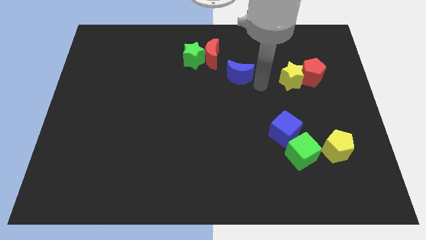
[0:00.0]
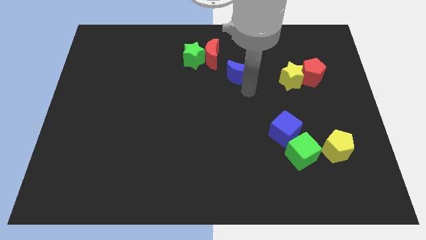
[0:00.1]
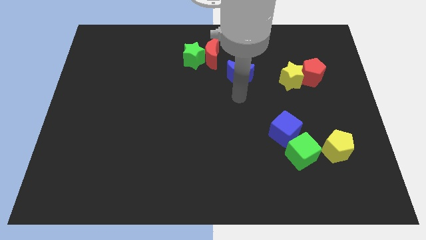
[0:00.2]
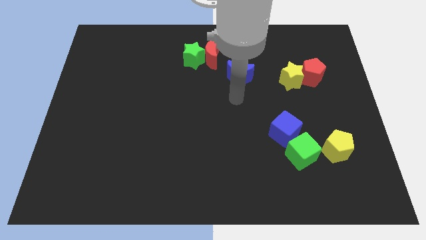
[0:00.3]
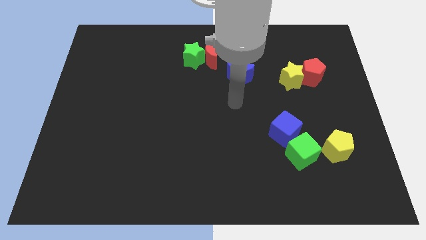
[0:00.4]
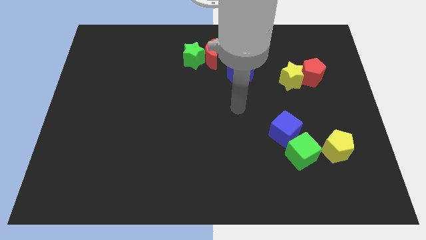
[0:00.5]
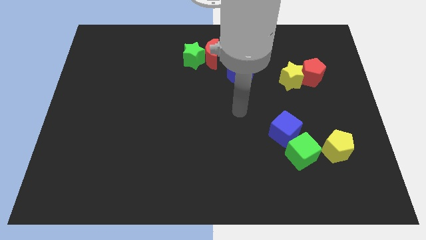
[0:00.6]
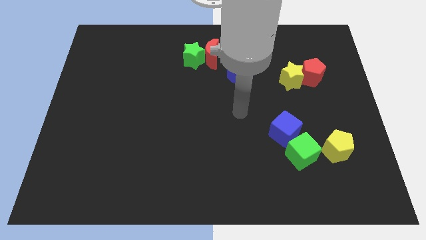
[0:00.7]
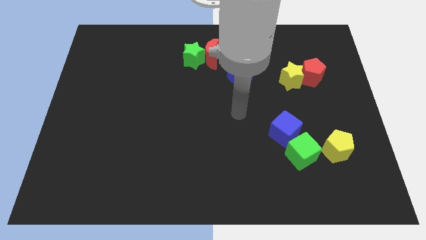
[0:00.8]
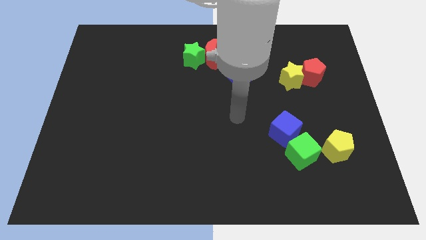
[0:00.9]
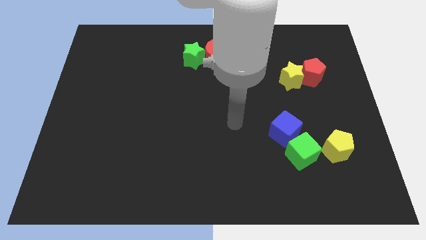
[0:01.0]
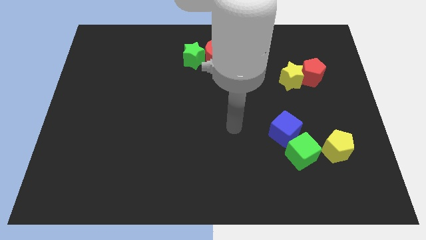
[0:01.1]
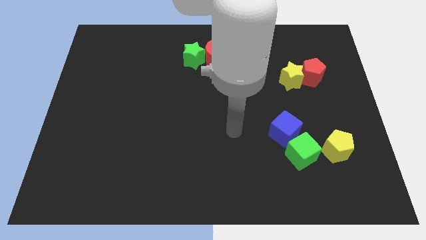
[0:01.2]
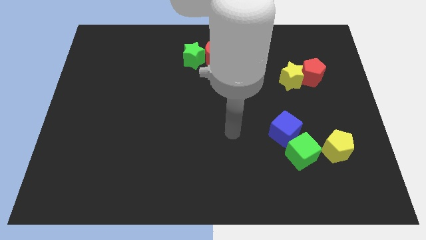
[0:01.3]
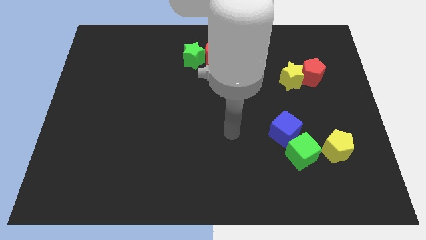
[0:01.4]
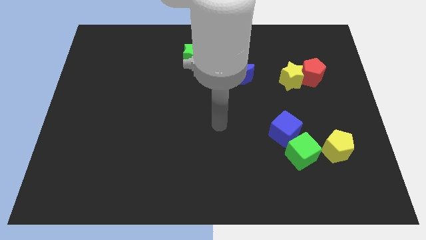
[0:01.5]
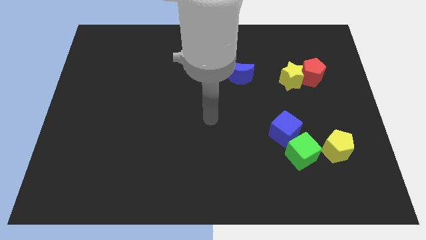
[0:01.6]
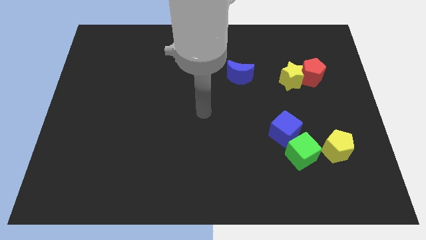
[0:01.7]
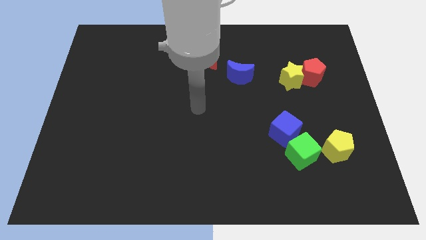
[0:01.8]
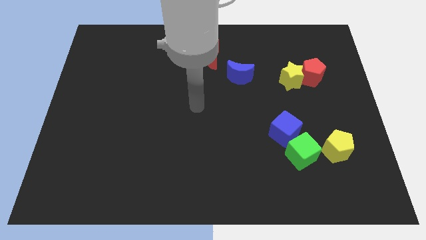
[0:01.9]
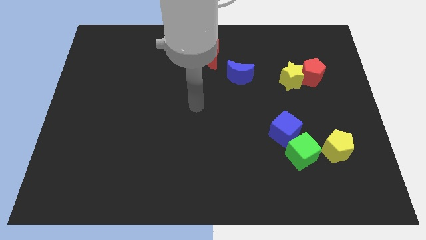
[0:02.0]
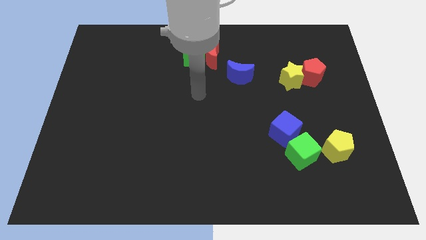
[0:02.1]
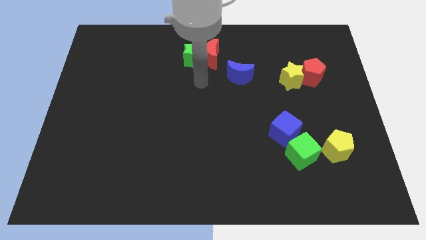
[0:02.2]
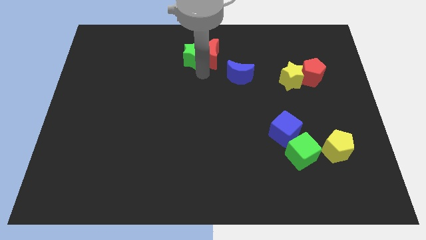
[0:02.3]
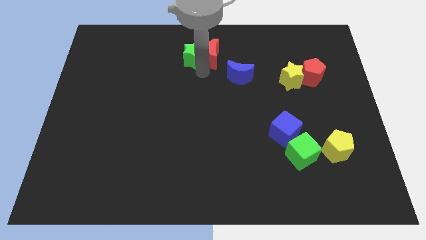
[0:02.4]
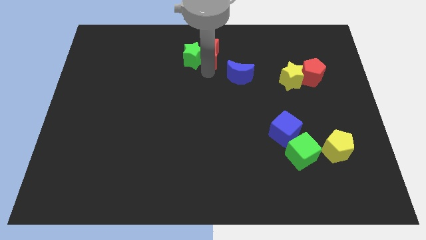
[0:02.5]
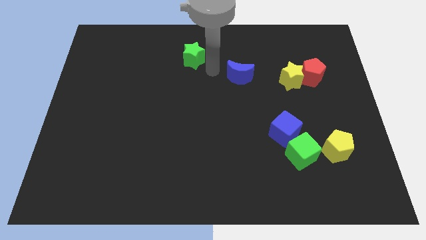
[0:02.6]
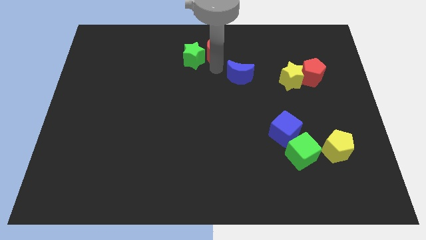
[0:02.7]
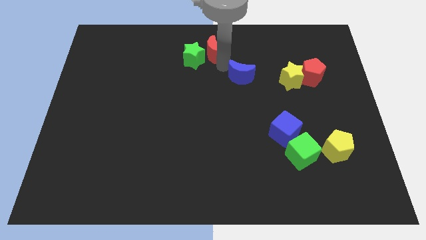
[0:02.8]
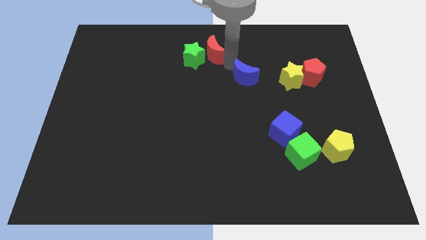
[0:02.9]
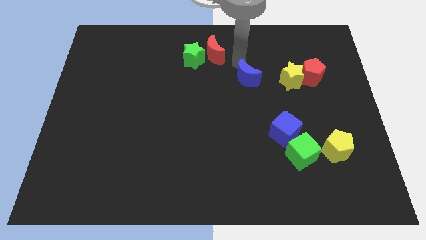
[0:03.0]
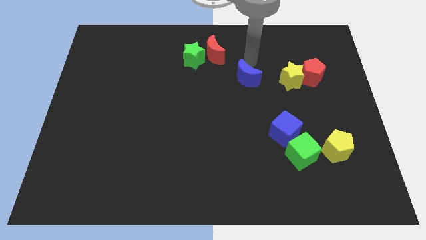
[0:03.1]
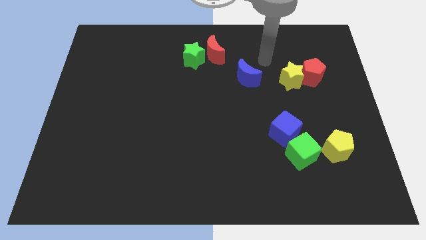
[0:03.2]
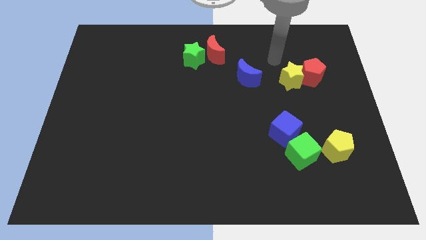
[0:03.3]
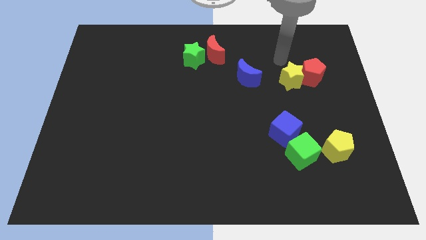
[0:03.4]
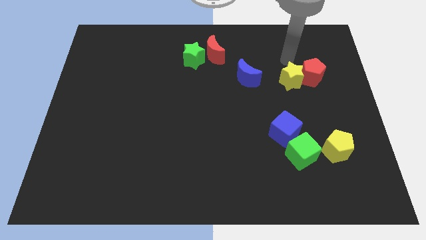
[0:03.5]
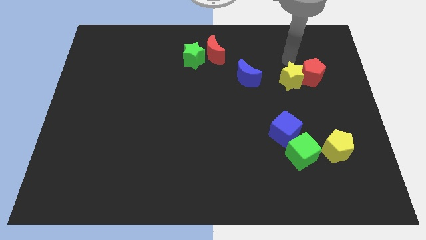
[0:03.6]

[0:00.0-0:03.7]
slightly touch the blue moon

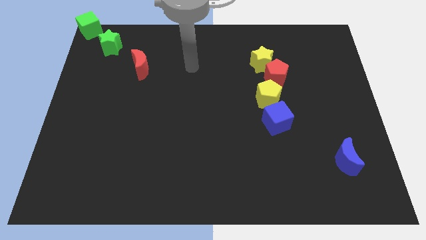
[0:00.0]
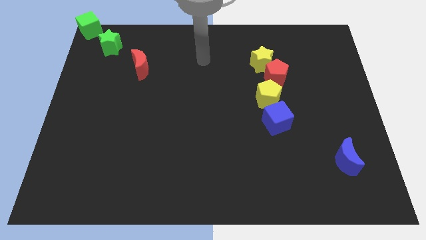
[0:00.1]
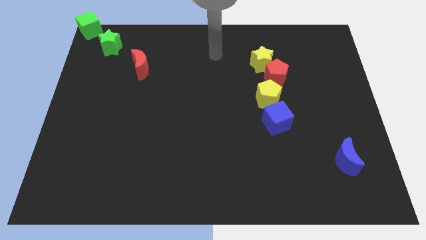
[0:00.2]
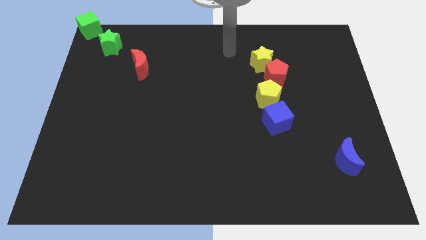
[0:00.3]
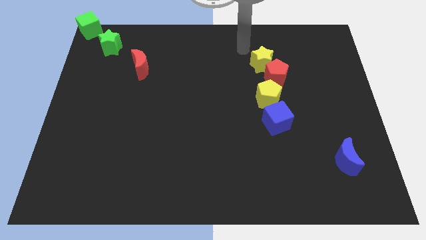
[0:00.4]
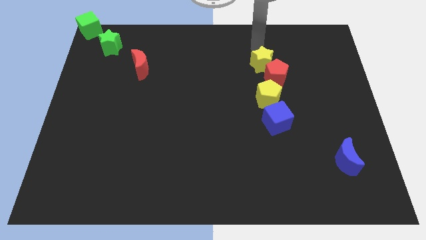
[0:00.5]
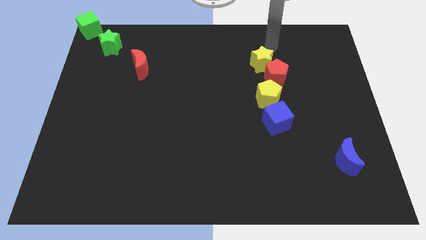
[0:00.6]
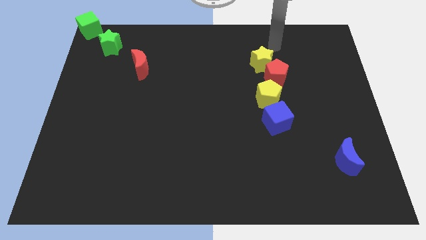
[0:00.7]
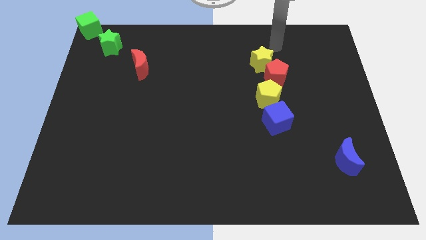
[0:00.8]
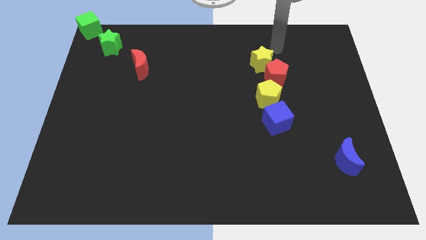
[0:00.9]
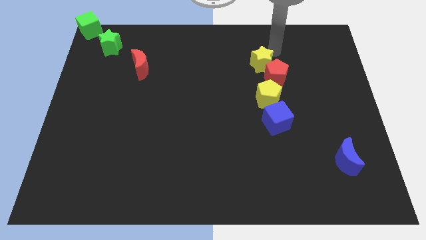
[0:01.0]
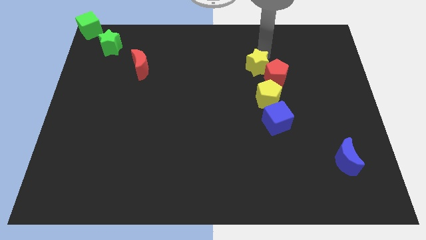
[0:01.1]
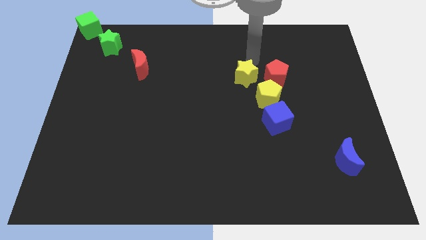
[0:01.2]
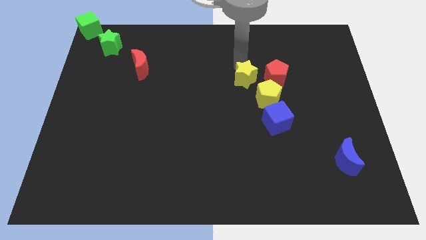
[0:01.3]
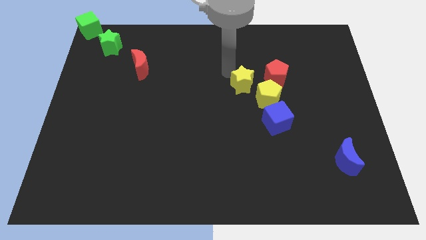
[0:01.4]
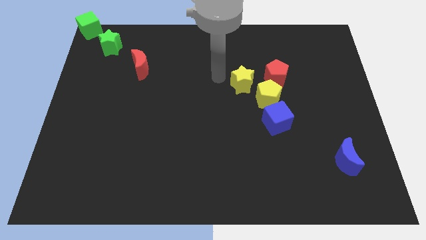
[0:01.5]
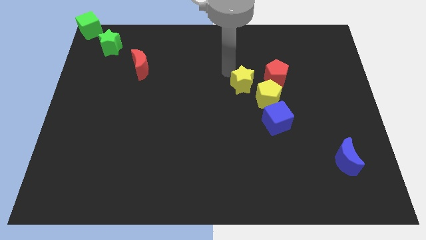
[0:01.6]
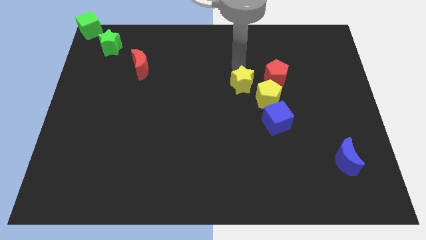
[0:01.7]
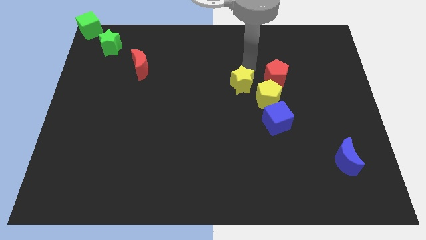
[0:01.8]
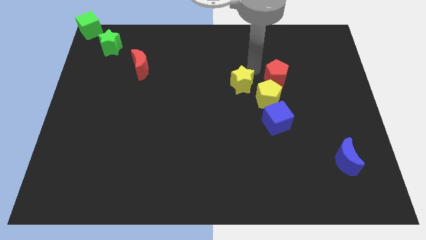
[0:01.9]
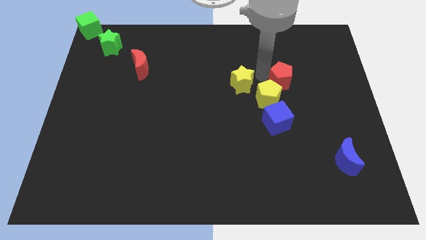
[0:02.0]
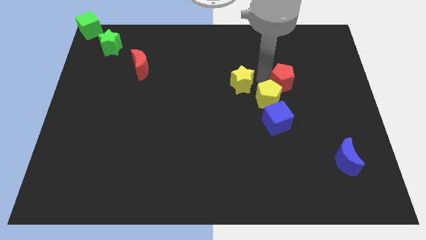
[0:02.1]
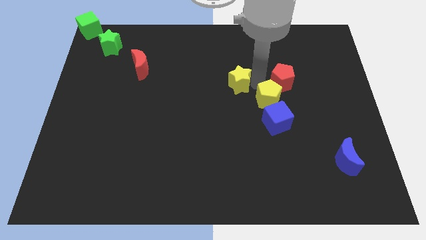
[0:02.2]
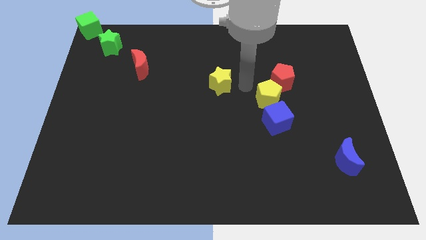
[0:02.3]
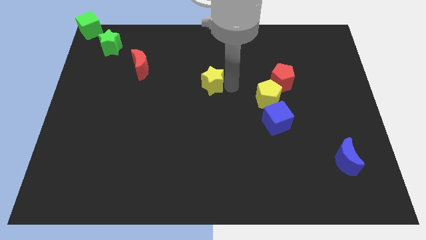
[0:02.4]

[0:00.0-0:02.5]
push the yellow star to the center of the board

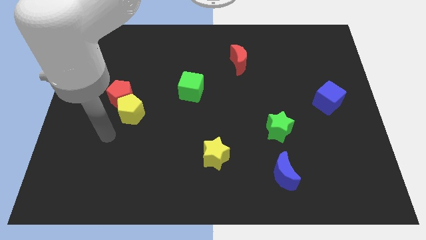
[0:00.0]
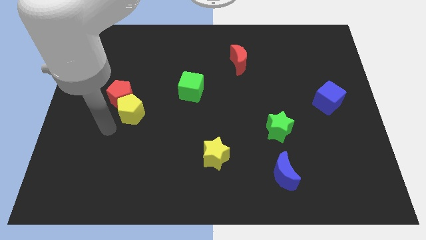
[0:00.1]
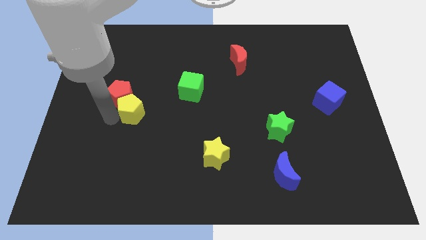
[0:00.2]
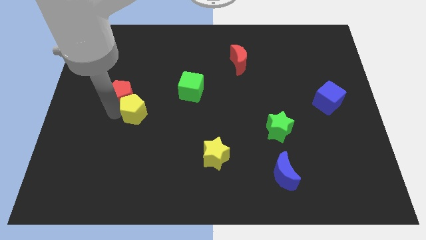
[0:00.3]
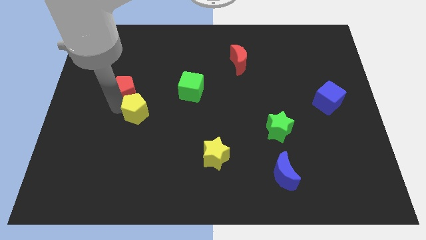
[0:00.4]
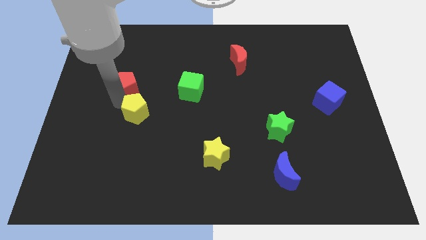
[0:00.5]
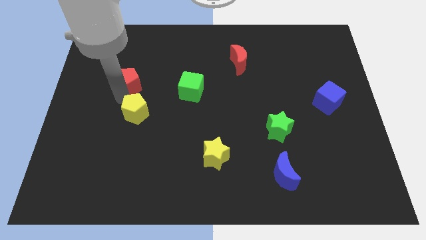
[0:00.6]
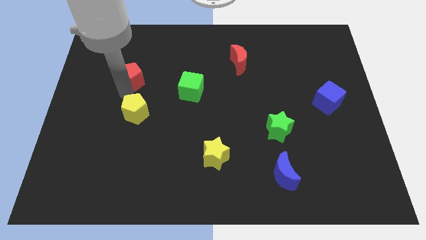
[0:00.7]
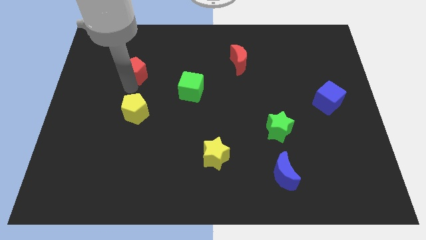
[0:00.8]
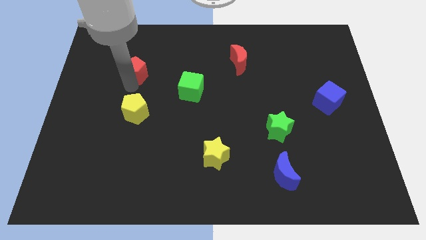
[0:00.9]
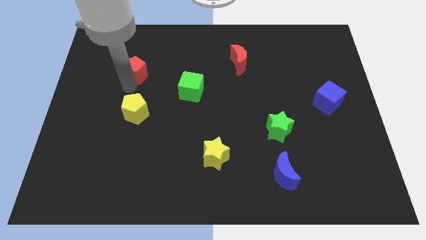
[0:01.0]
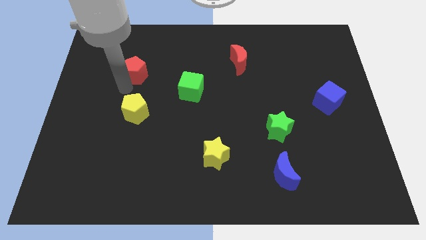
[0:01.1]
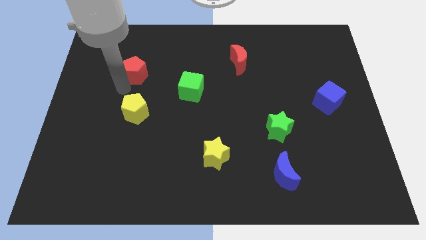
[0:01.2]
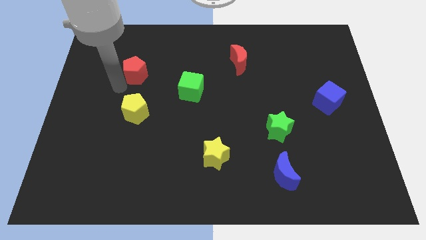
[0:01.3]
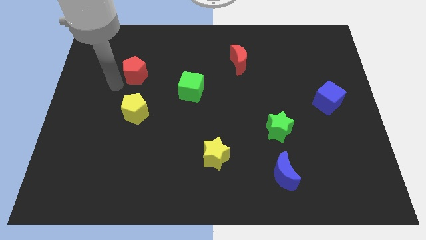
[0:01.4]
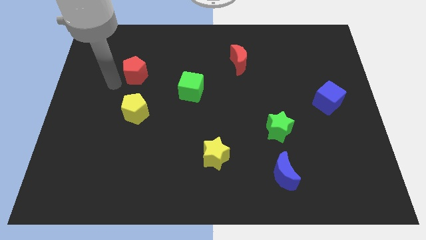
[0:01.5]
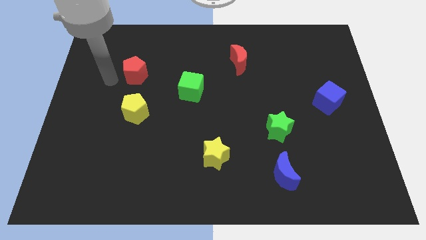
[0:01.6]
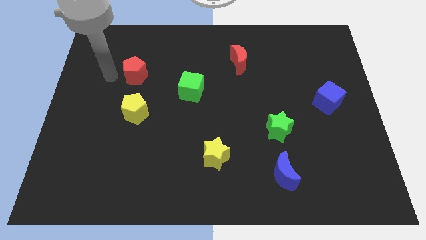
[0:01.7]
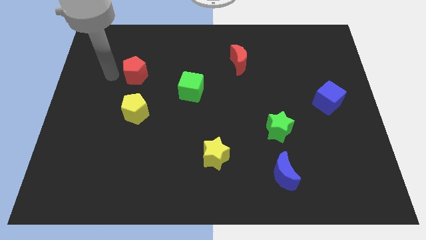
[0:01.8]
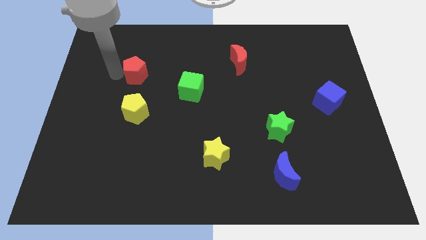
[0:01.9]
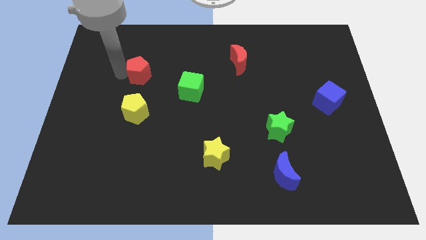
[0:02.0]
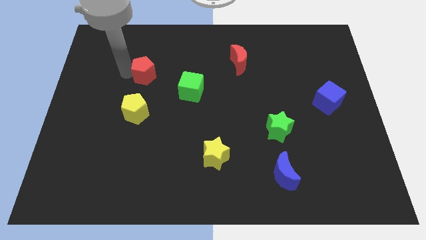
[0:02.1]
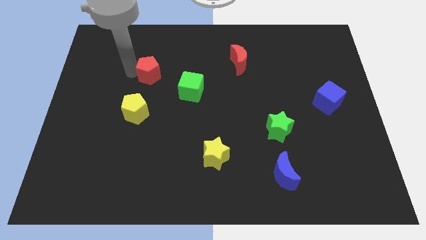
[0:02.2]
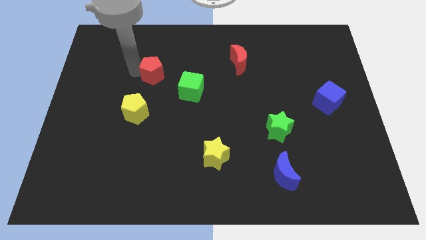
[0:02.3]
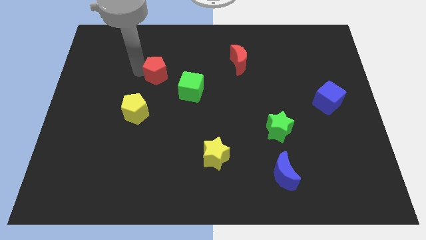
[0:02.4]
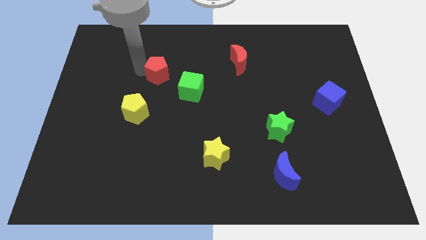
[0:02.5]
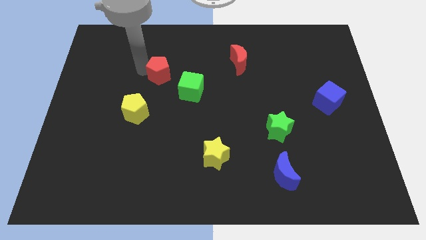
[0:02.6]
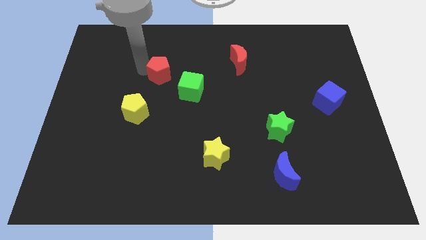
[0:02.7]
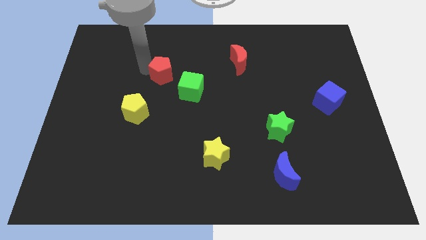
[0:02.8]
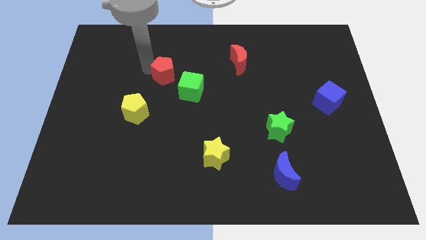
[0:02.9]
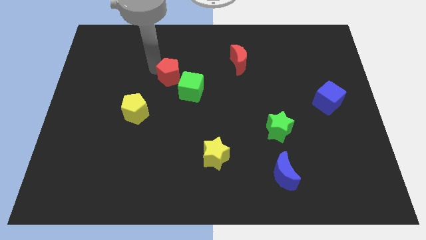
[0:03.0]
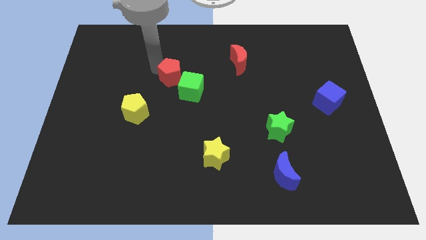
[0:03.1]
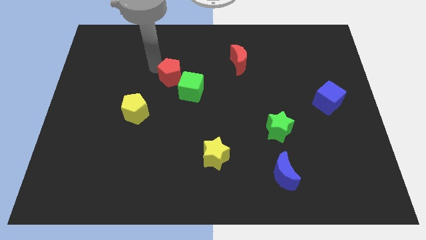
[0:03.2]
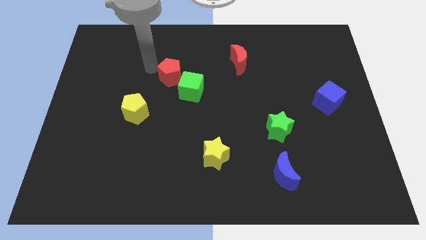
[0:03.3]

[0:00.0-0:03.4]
move your arm towards the top left of the red pentagon
